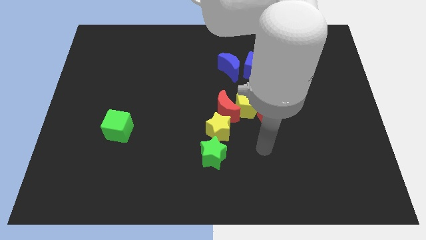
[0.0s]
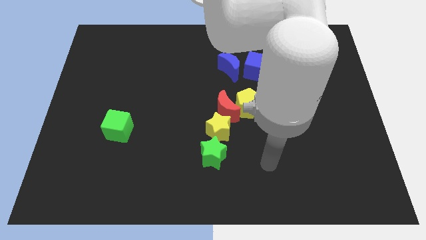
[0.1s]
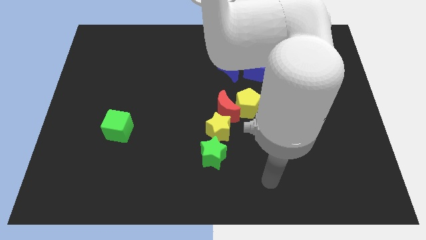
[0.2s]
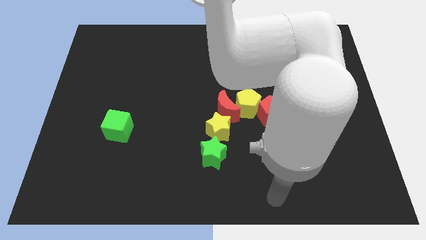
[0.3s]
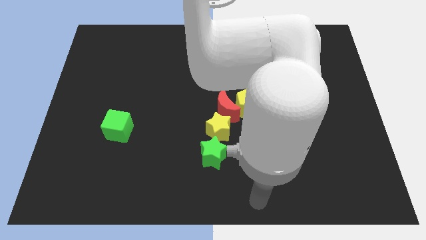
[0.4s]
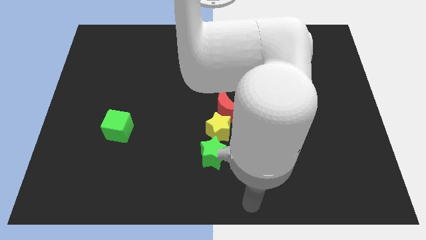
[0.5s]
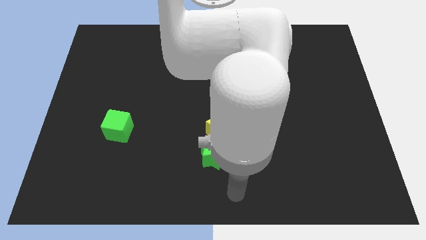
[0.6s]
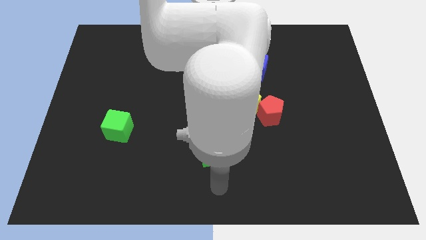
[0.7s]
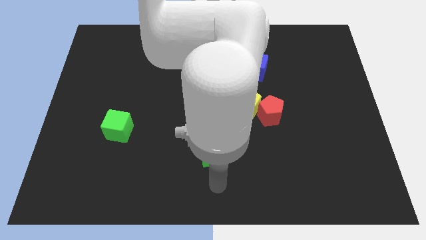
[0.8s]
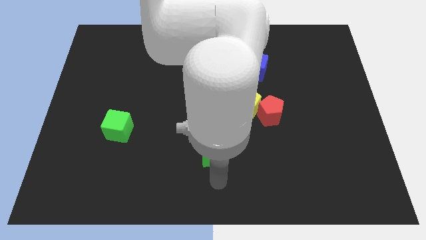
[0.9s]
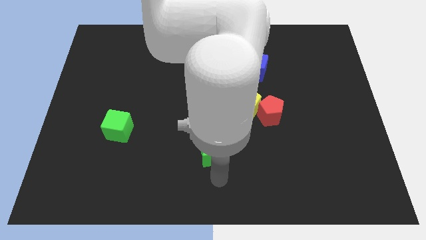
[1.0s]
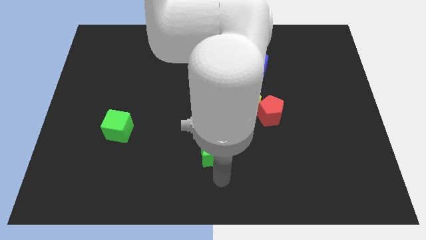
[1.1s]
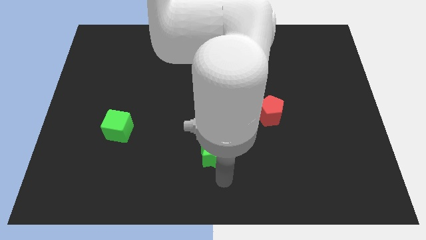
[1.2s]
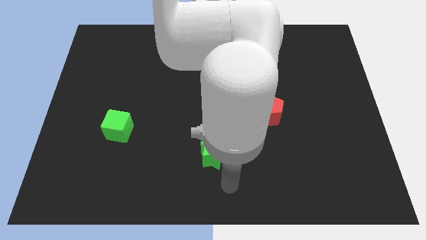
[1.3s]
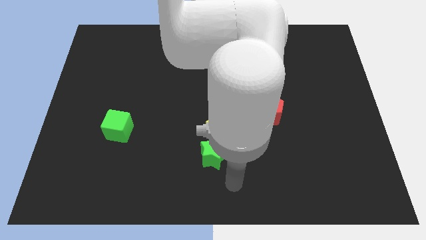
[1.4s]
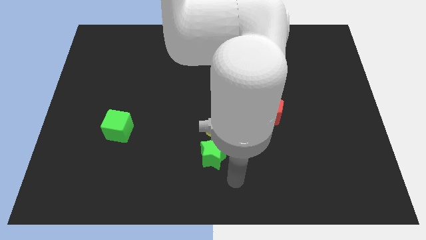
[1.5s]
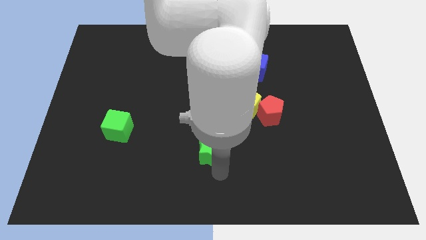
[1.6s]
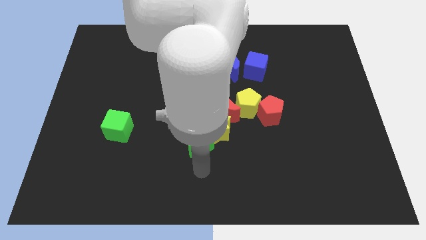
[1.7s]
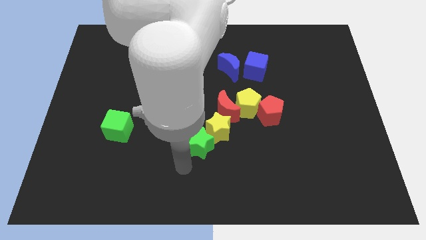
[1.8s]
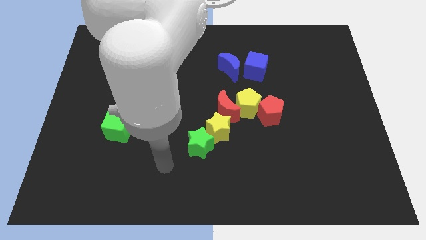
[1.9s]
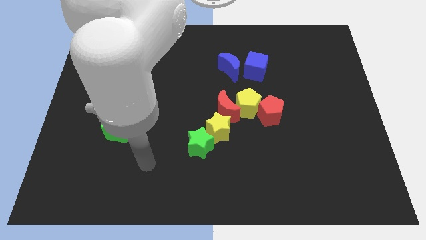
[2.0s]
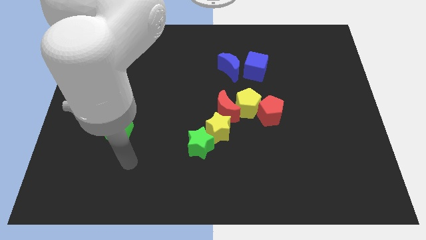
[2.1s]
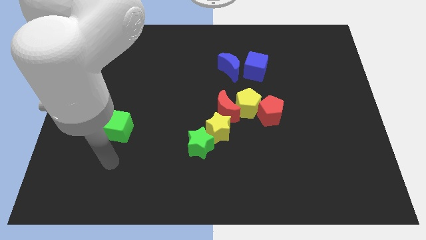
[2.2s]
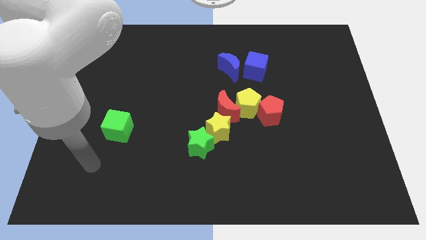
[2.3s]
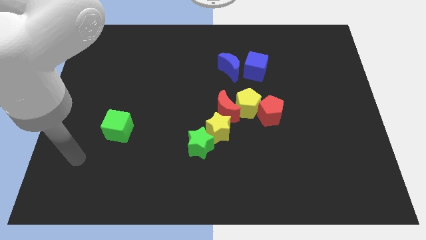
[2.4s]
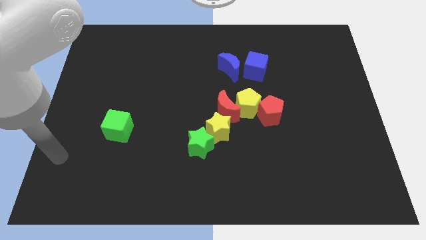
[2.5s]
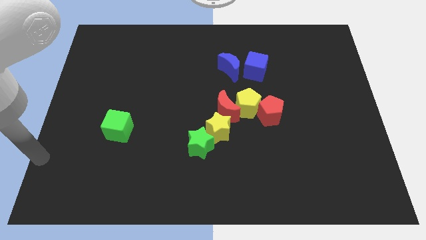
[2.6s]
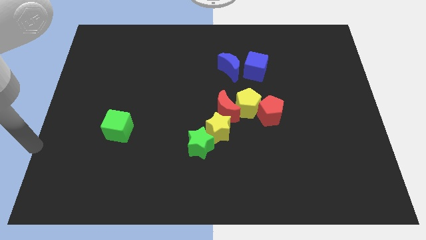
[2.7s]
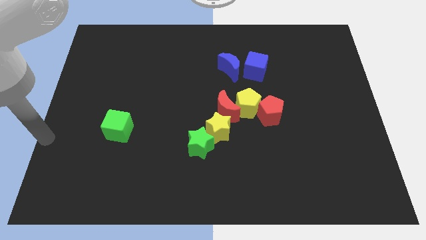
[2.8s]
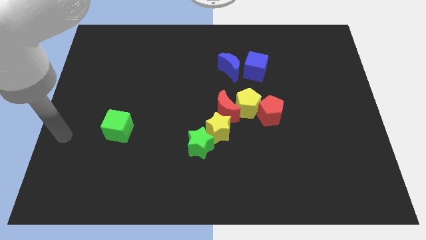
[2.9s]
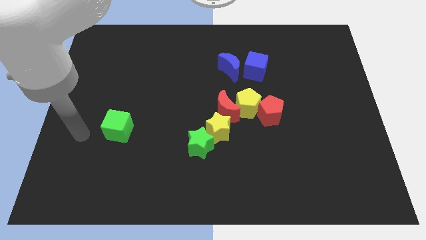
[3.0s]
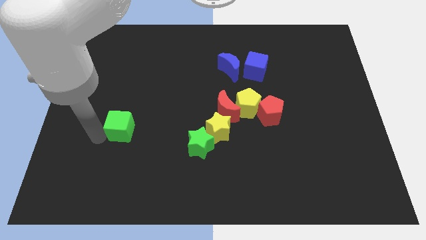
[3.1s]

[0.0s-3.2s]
move green star into group of blocks

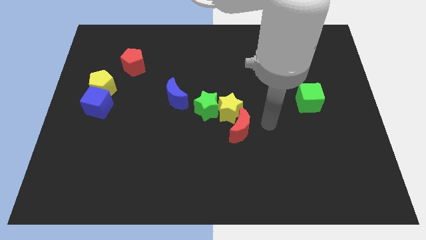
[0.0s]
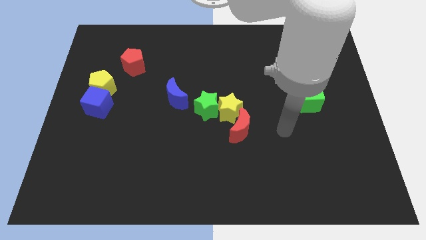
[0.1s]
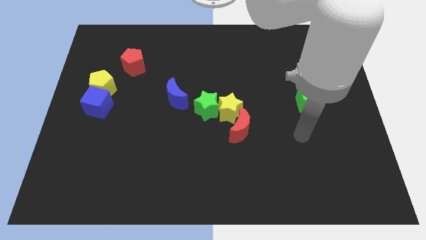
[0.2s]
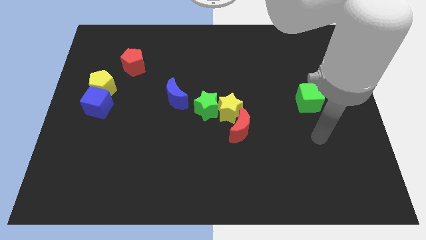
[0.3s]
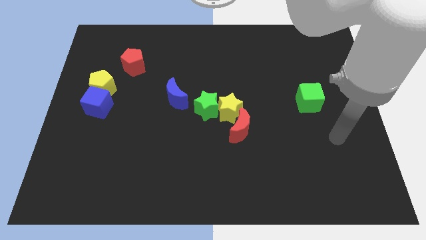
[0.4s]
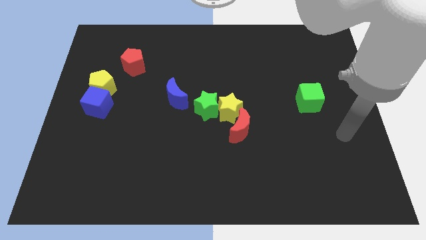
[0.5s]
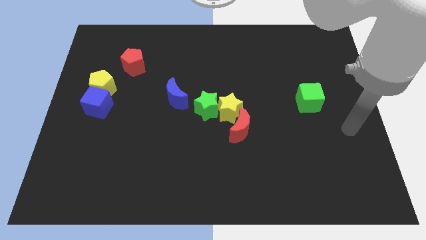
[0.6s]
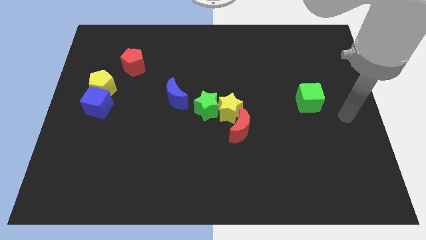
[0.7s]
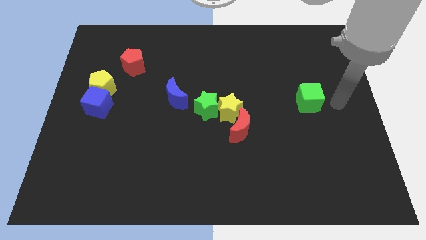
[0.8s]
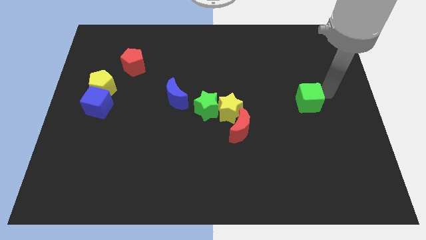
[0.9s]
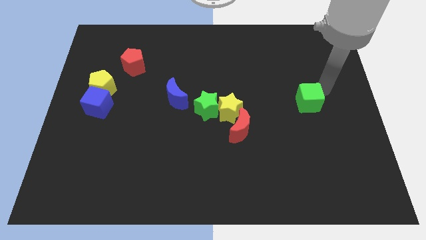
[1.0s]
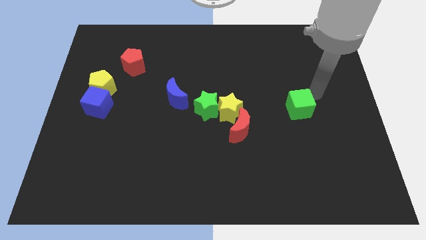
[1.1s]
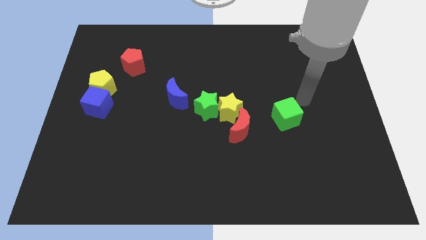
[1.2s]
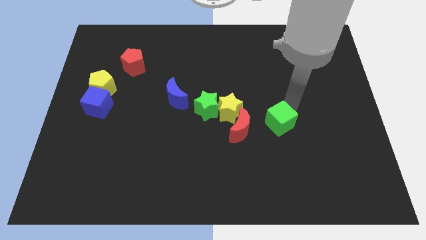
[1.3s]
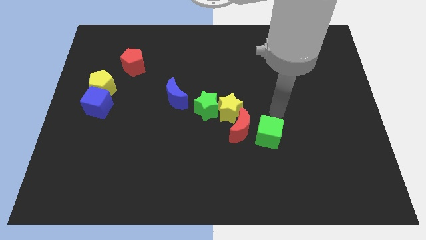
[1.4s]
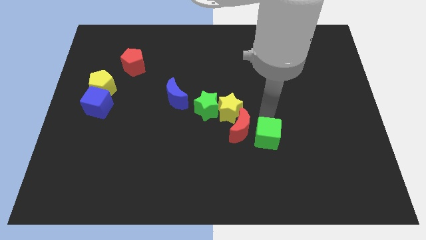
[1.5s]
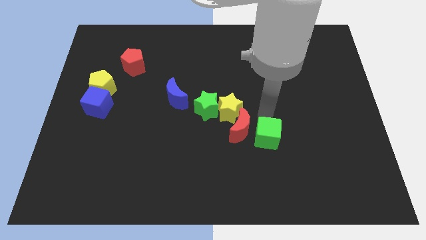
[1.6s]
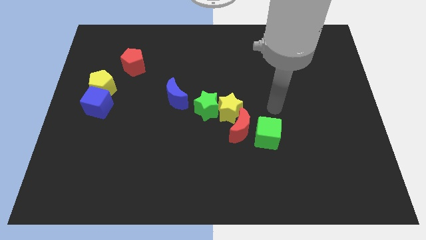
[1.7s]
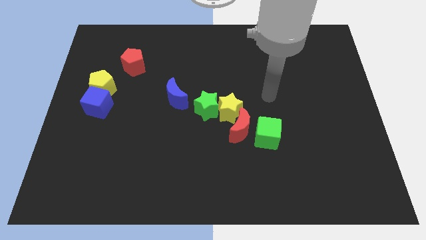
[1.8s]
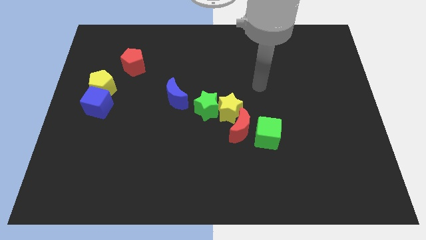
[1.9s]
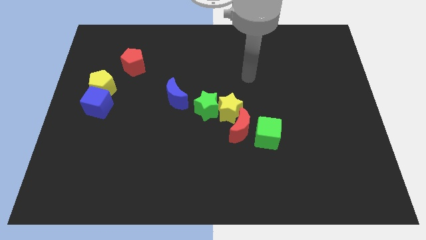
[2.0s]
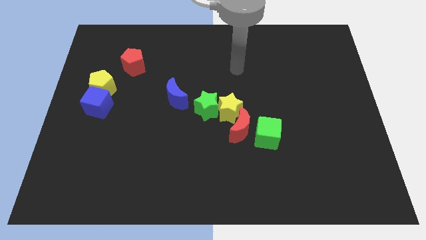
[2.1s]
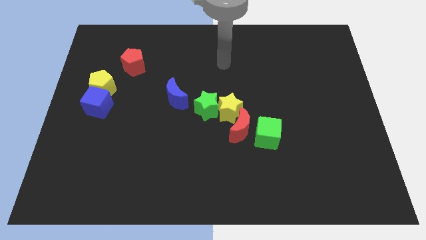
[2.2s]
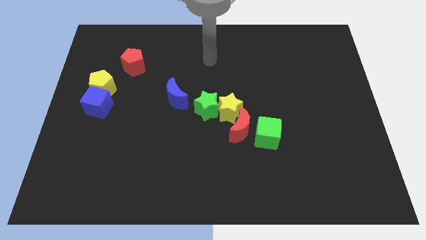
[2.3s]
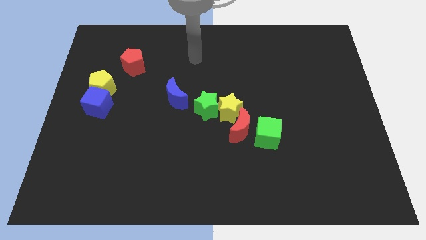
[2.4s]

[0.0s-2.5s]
push the green cube to the right of the red crescent

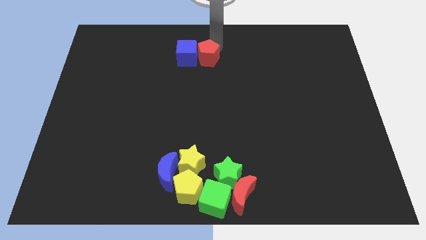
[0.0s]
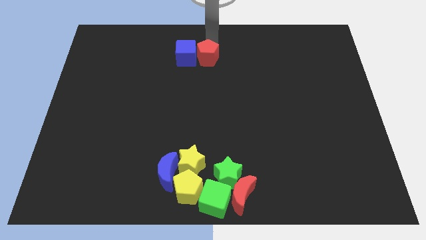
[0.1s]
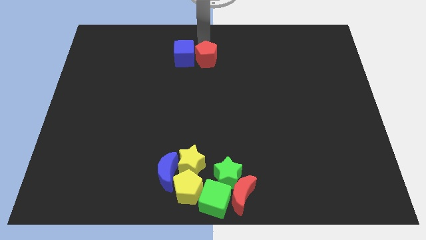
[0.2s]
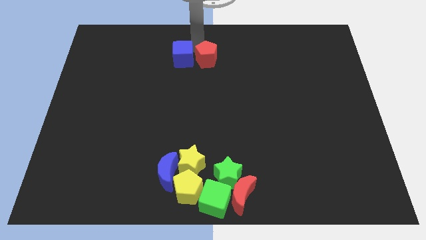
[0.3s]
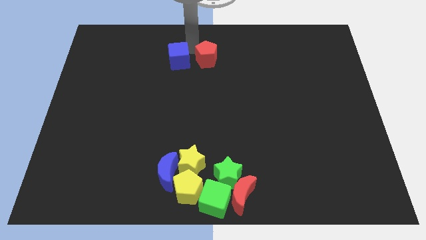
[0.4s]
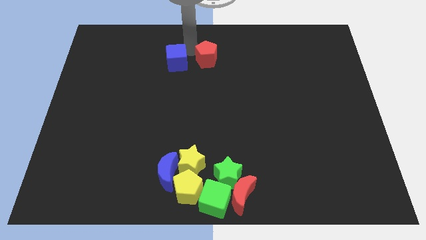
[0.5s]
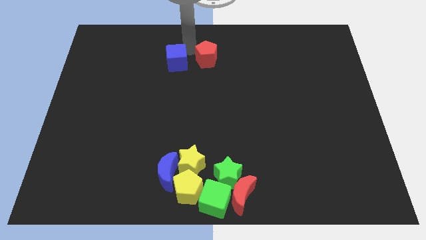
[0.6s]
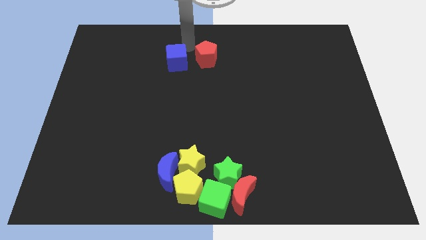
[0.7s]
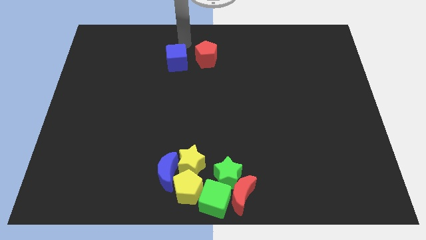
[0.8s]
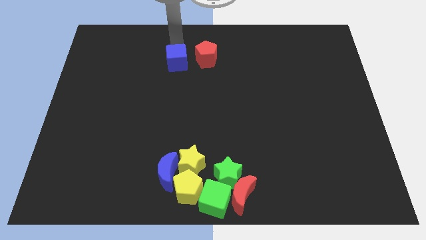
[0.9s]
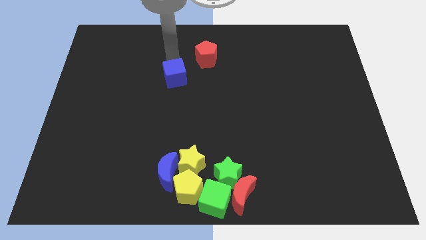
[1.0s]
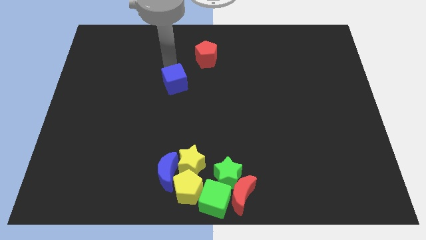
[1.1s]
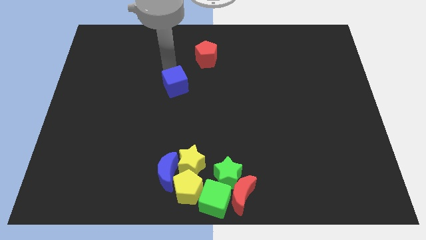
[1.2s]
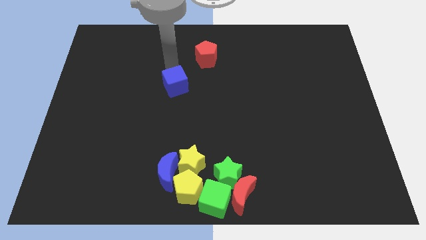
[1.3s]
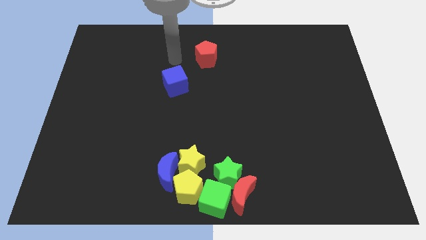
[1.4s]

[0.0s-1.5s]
separate the blue cube from the red pentagon

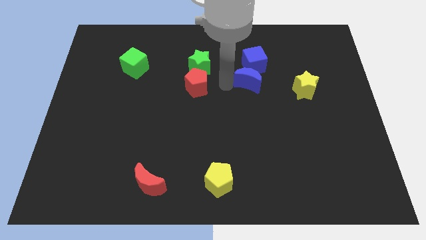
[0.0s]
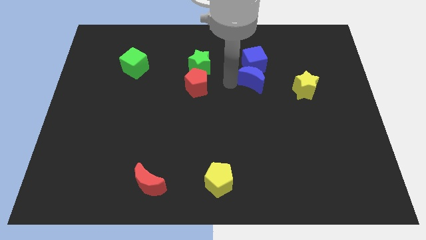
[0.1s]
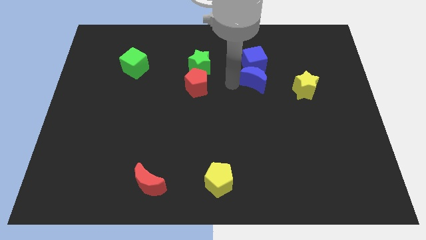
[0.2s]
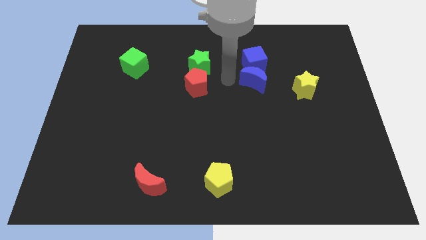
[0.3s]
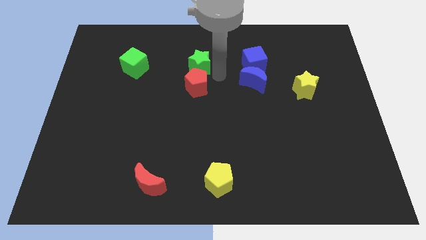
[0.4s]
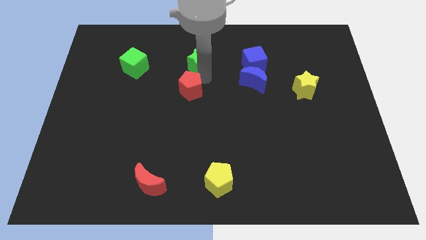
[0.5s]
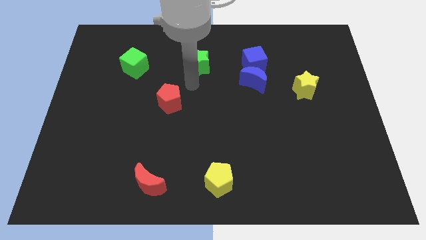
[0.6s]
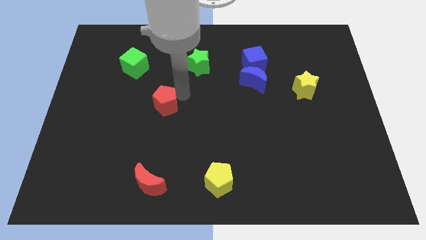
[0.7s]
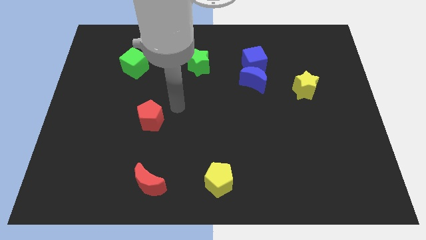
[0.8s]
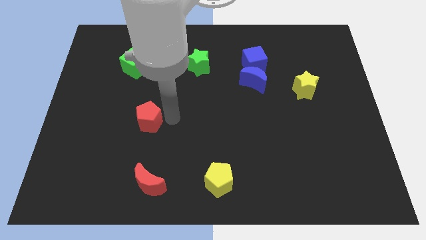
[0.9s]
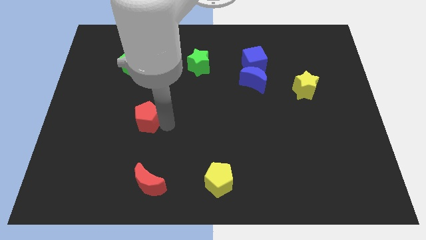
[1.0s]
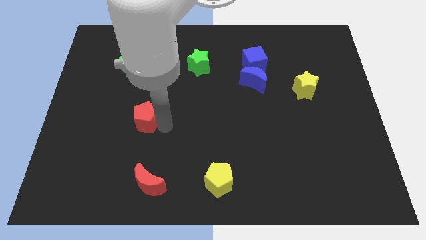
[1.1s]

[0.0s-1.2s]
place the red pentagon below the green cube

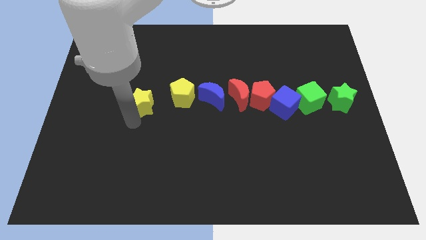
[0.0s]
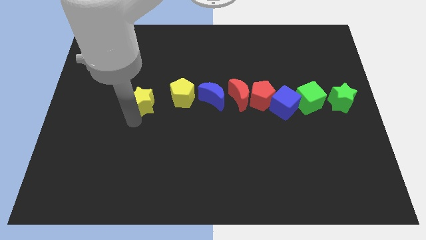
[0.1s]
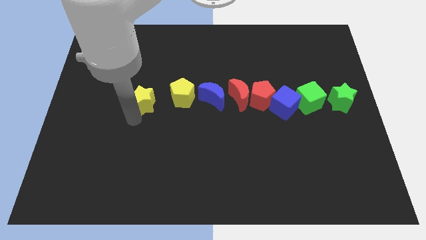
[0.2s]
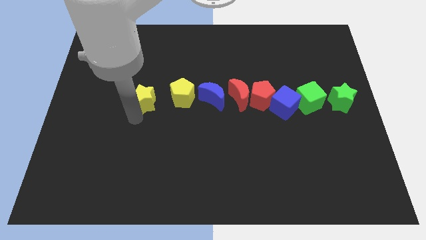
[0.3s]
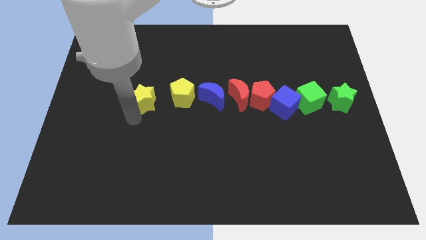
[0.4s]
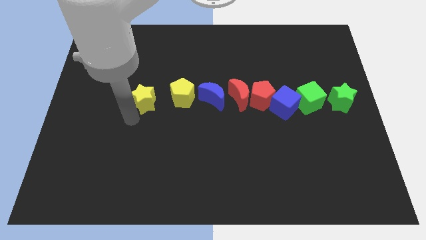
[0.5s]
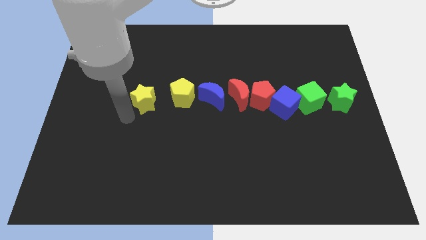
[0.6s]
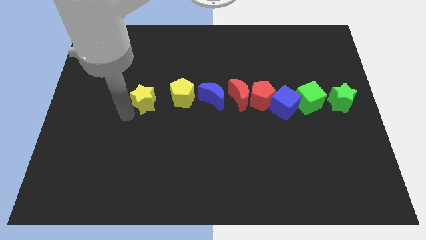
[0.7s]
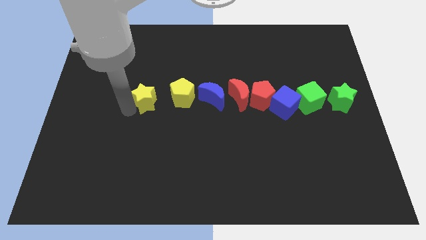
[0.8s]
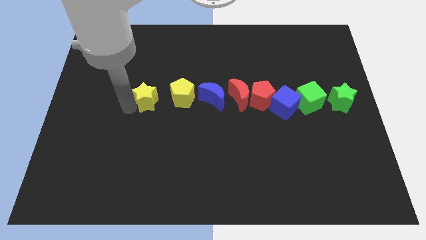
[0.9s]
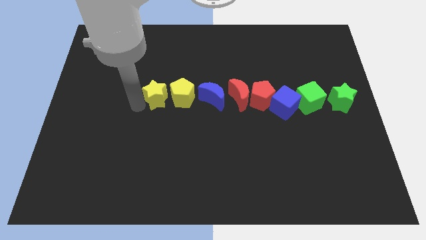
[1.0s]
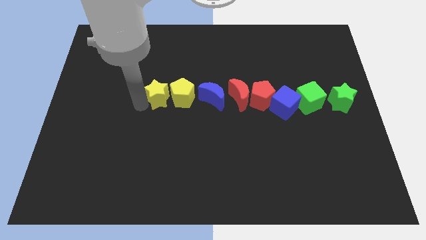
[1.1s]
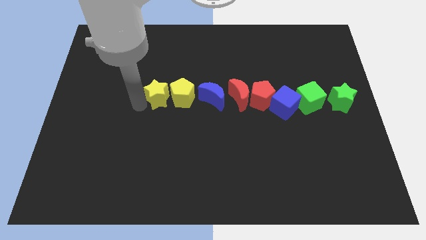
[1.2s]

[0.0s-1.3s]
adjust the yellow star slightly up to form a horizontal line
